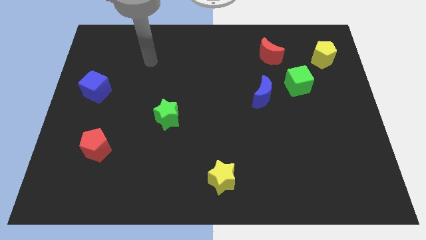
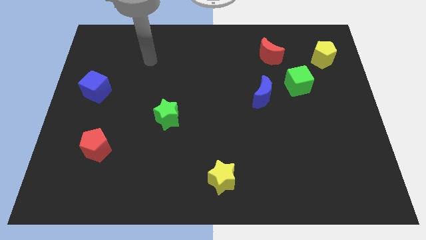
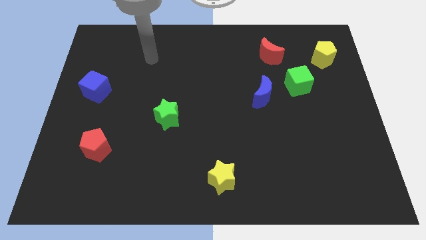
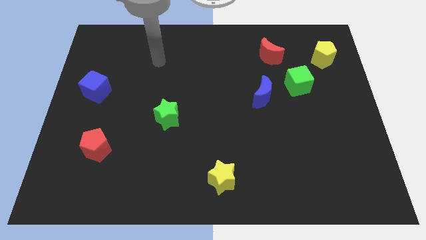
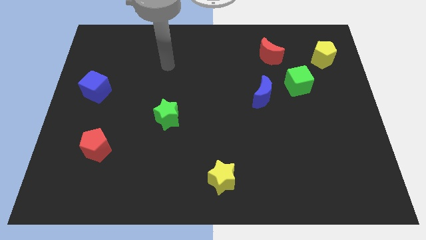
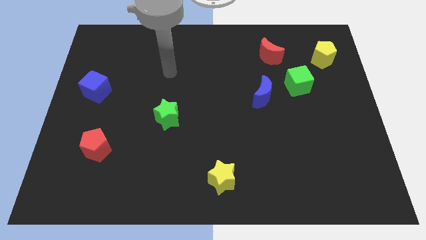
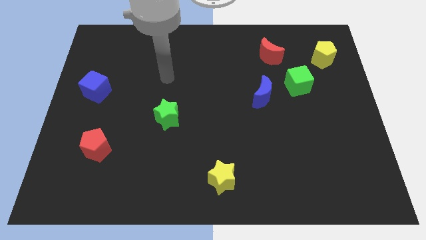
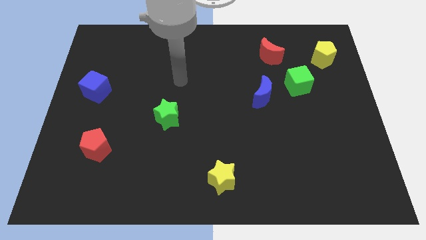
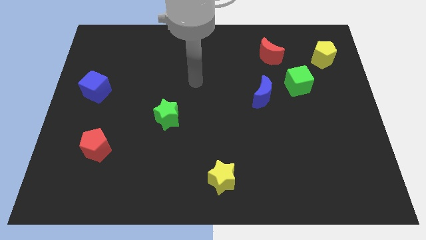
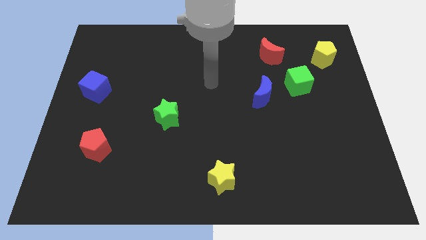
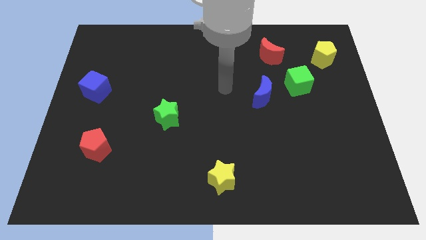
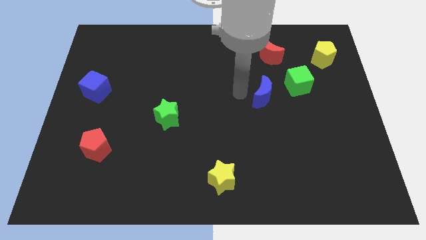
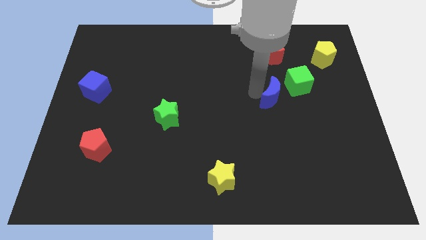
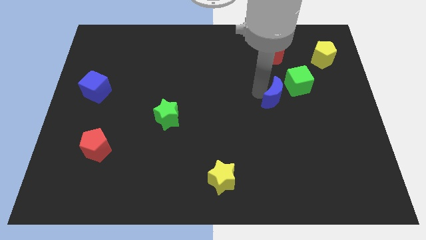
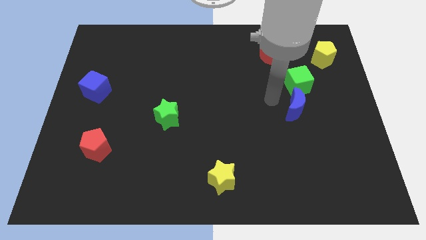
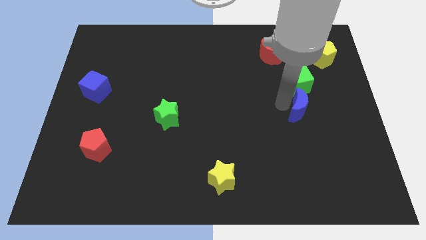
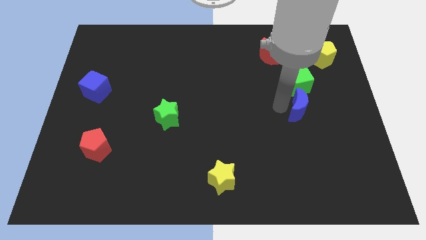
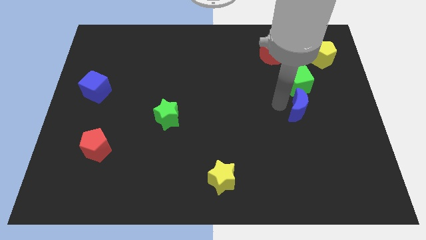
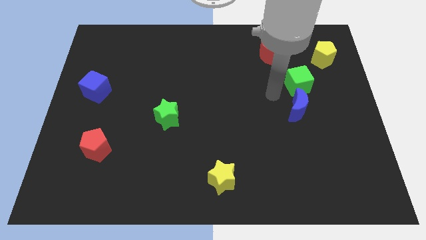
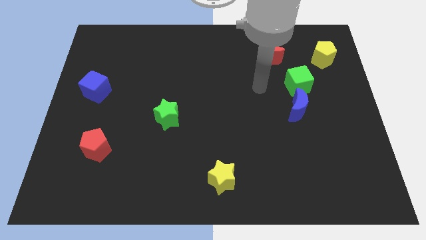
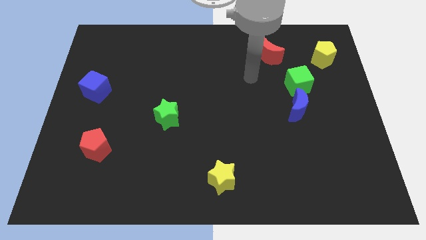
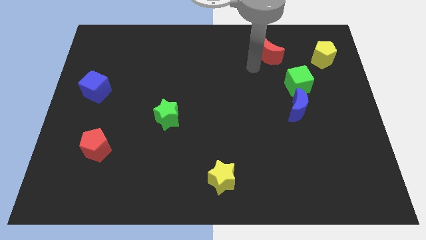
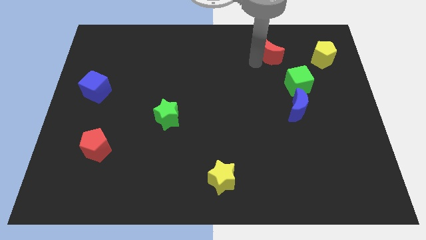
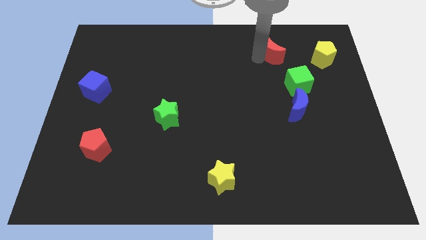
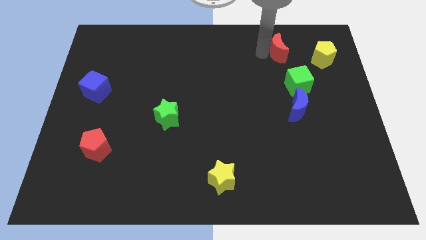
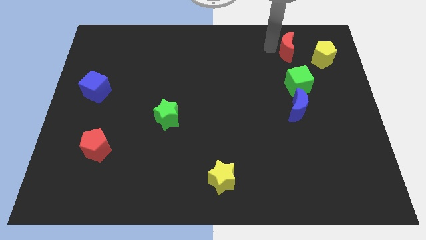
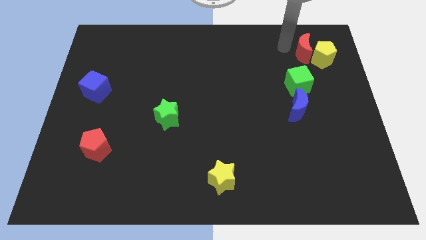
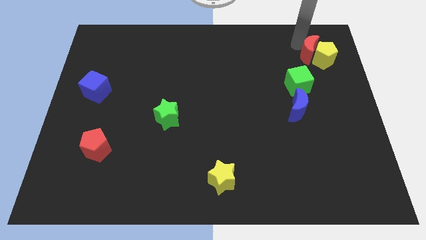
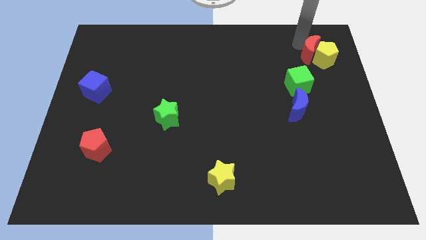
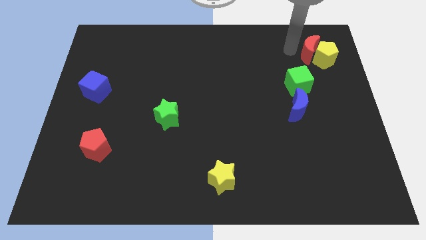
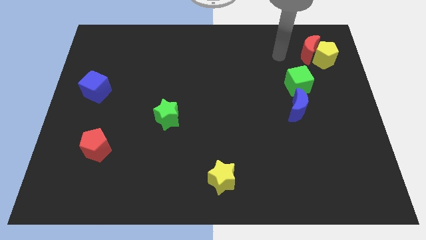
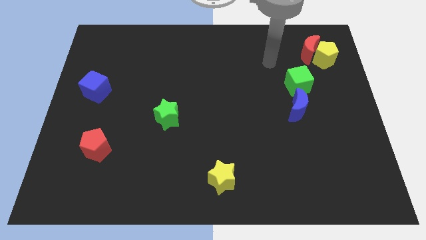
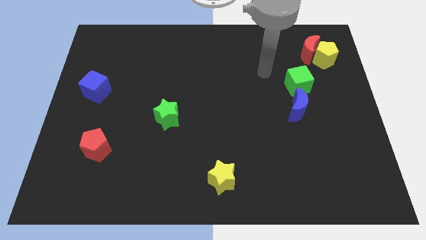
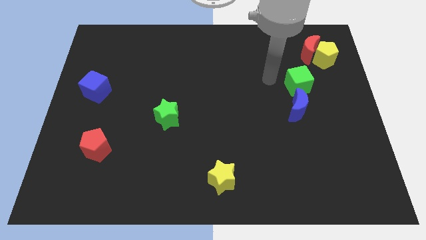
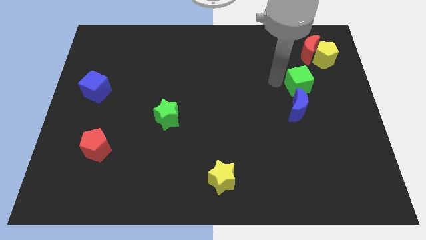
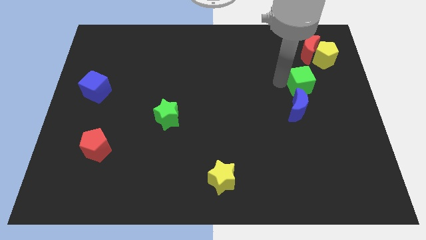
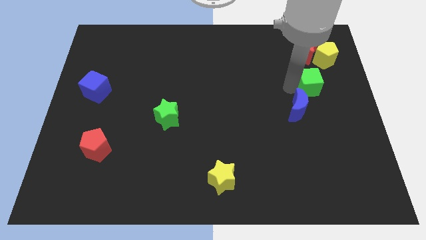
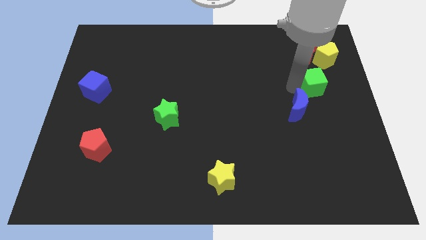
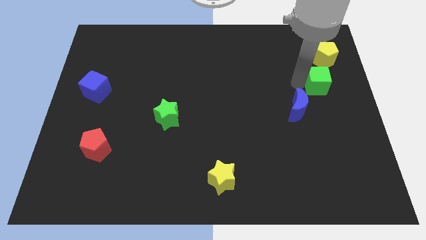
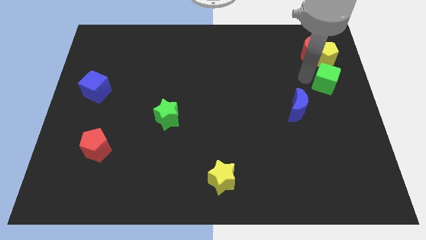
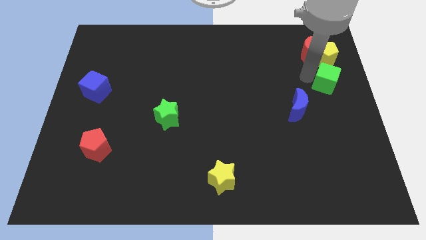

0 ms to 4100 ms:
push the red pentagon blue crescent and the green cube to the right of the board

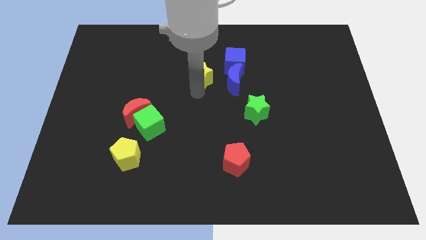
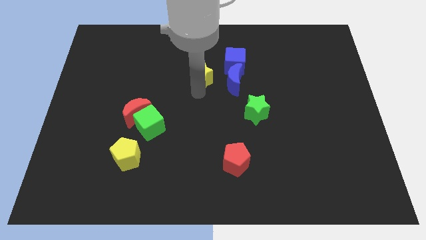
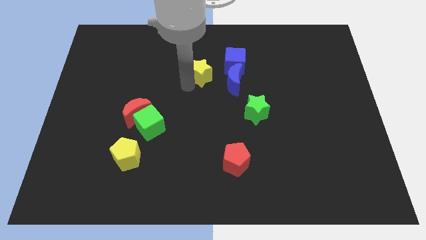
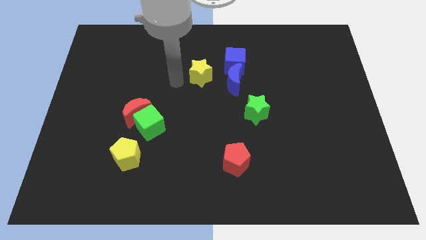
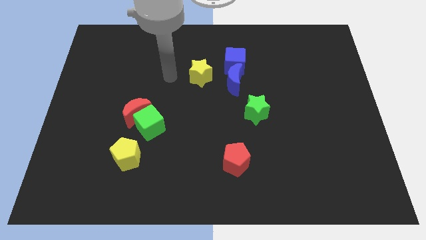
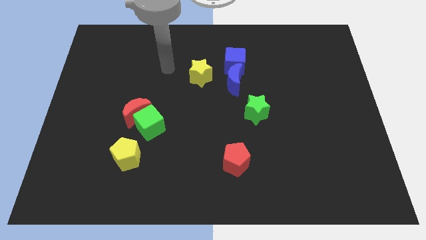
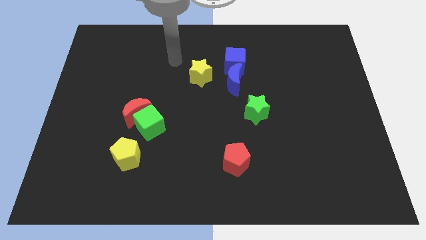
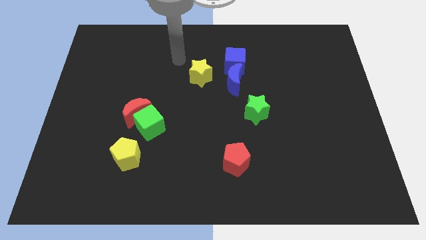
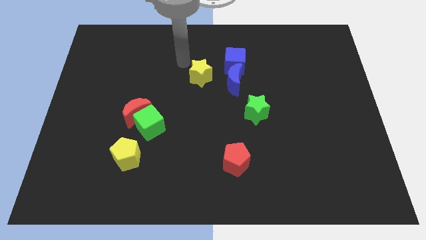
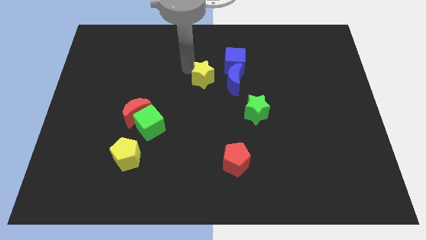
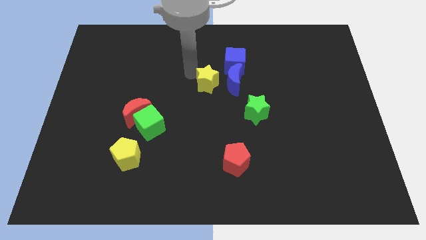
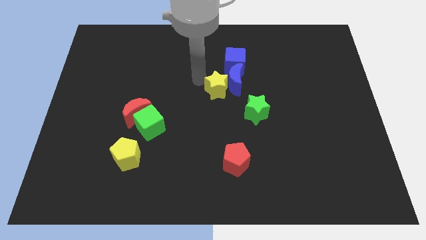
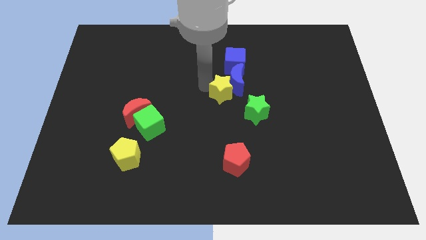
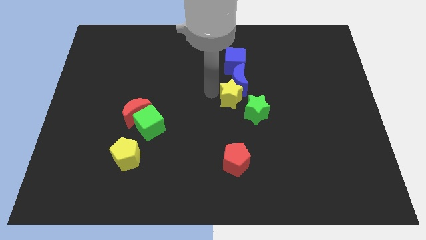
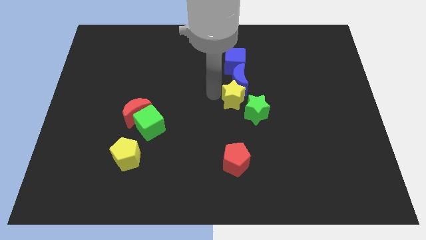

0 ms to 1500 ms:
move the yellow star into the blue moon

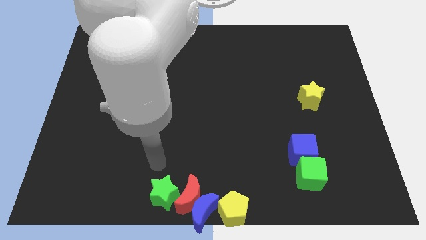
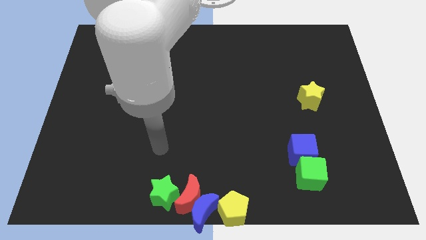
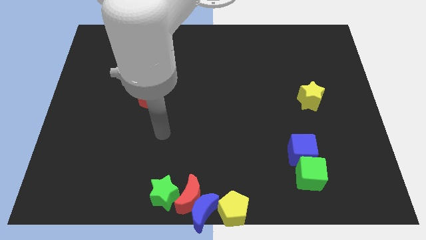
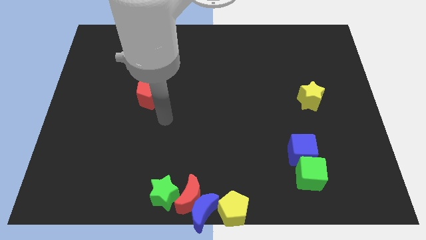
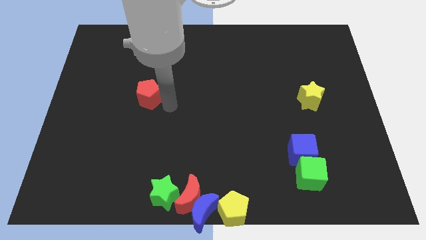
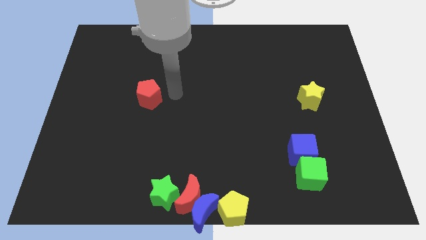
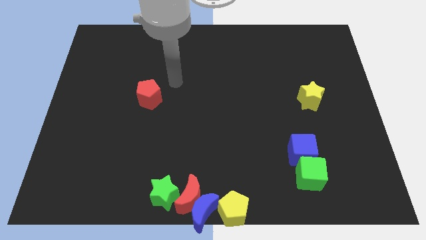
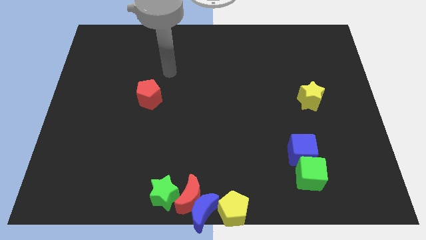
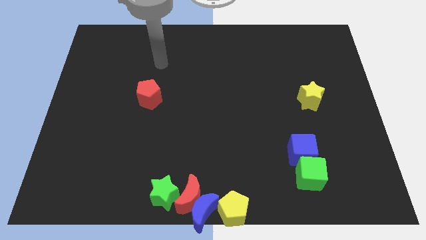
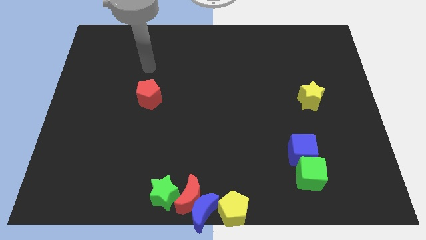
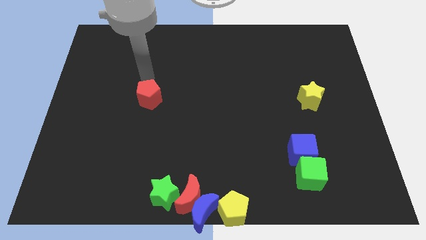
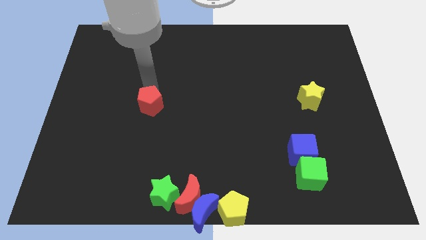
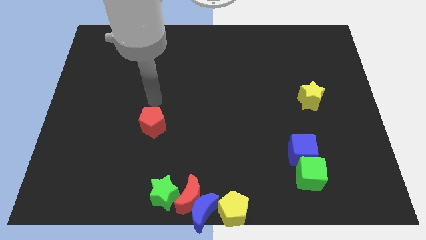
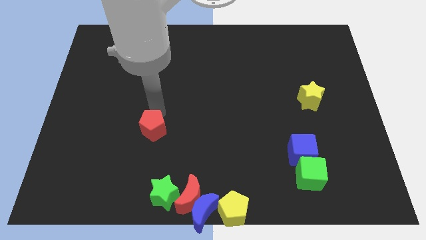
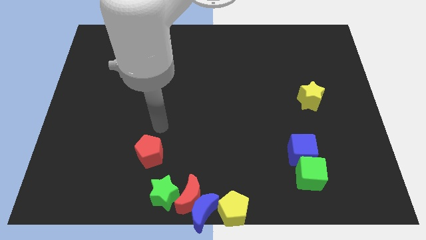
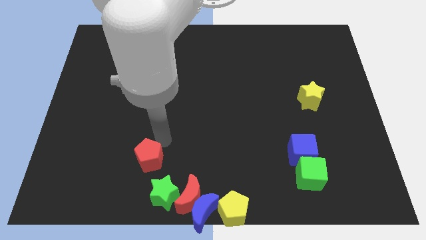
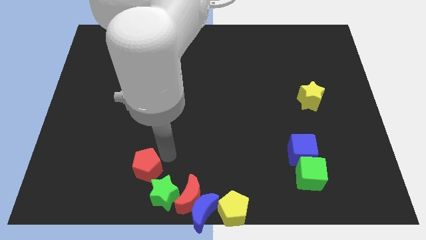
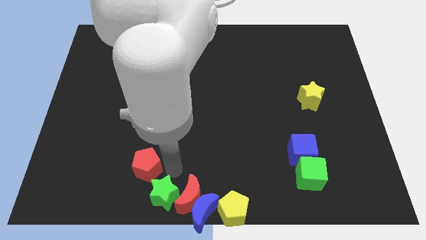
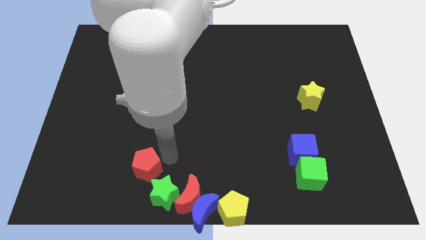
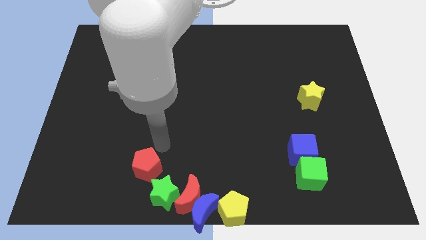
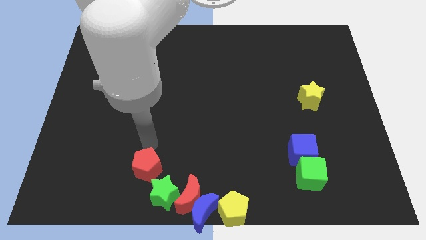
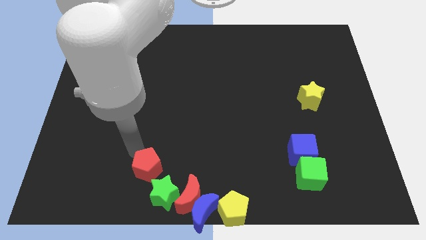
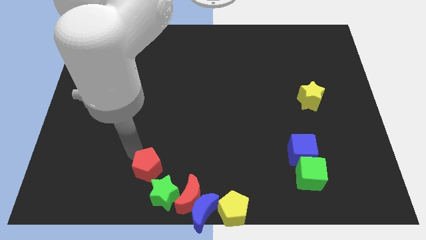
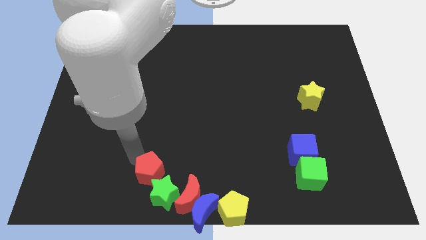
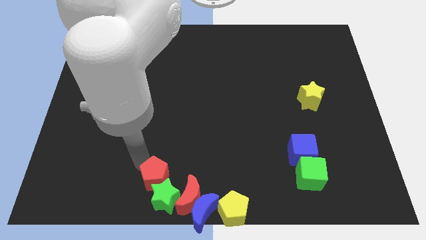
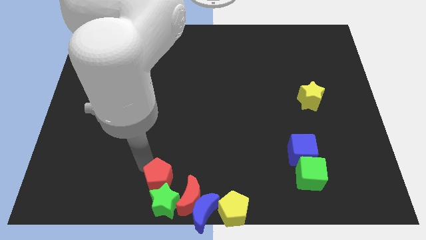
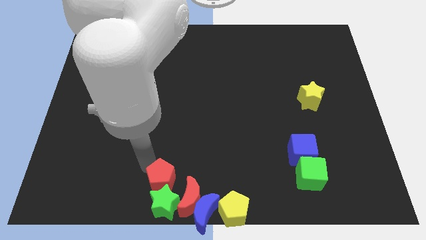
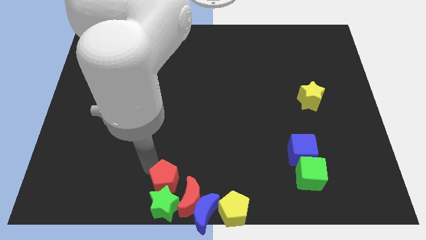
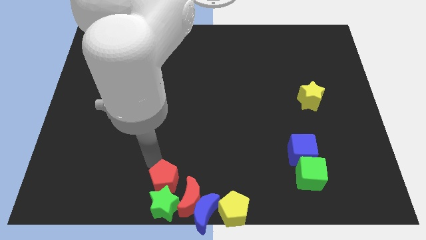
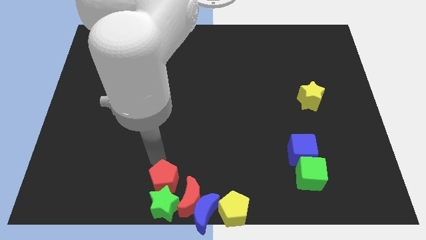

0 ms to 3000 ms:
move the red pentagon above the green star

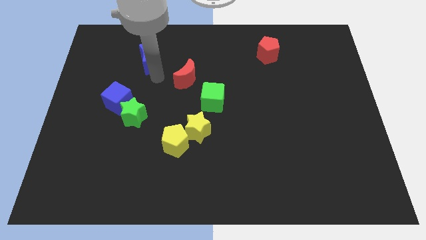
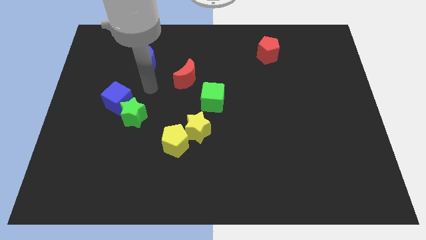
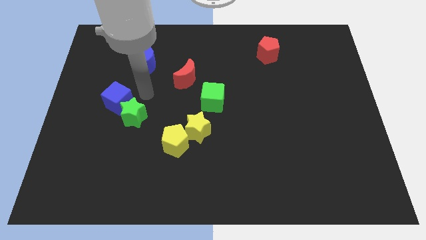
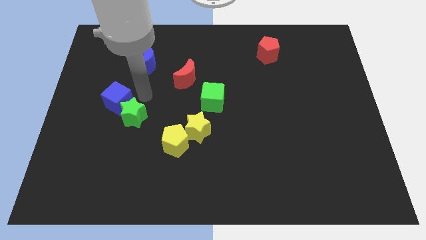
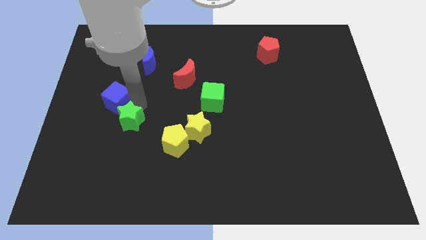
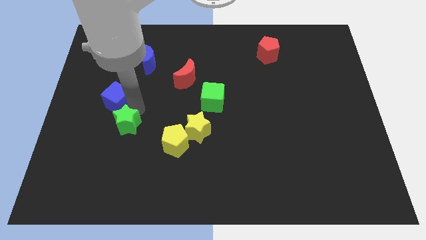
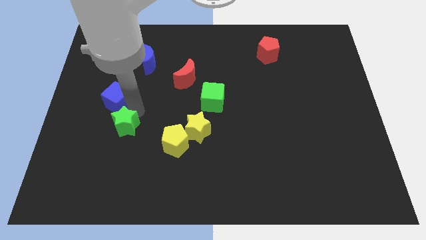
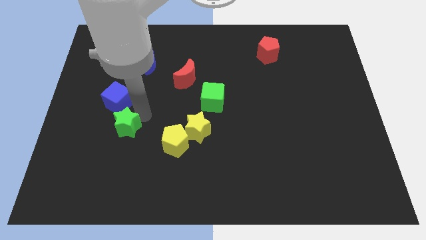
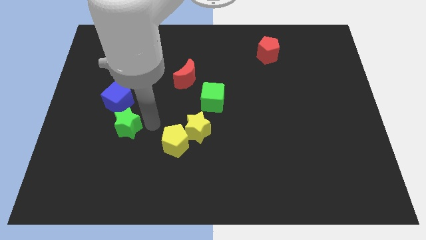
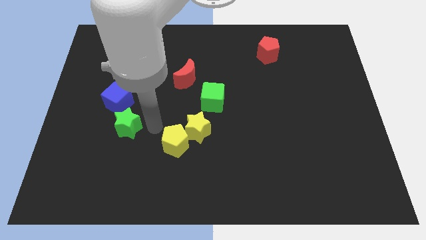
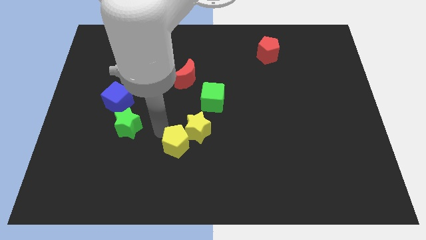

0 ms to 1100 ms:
push the green star slightly towards down
